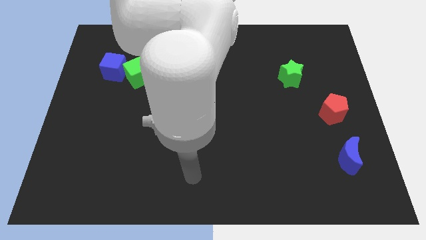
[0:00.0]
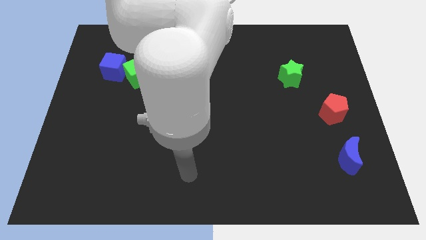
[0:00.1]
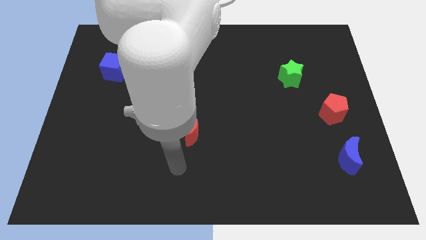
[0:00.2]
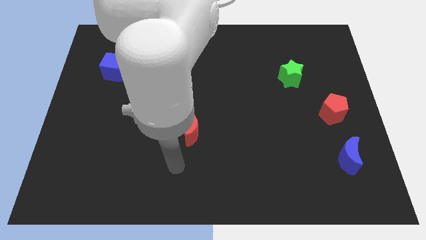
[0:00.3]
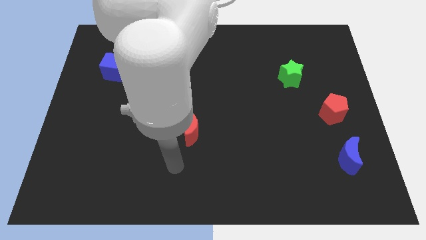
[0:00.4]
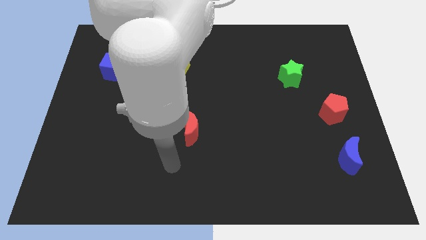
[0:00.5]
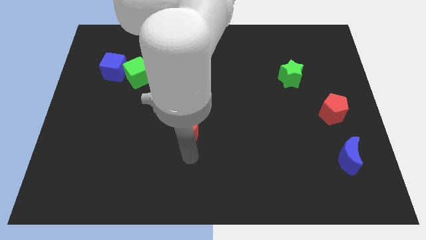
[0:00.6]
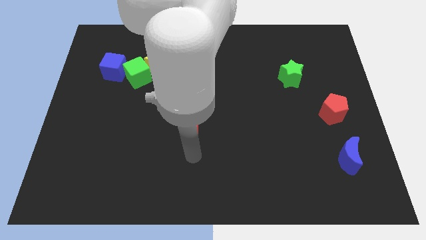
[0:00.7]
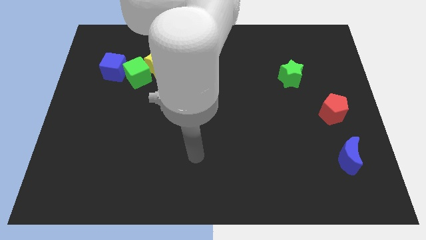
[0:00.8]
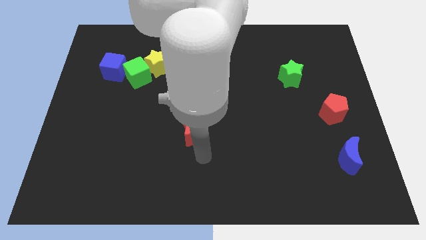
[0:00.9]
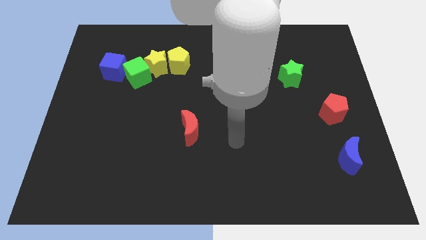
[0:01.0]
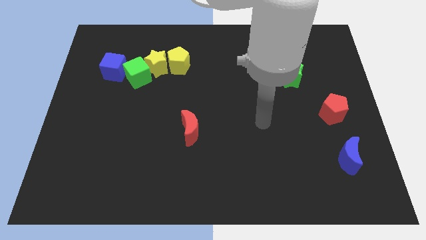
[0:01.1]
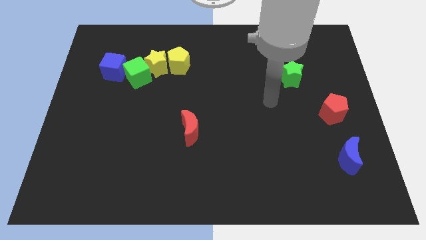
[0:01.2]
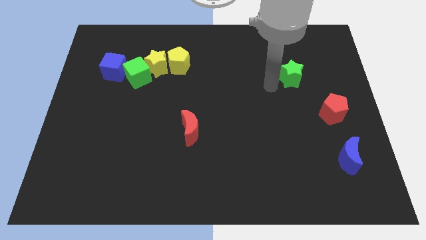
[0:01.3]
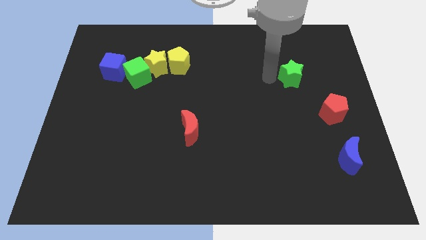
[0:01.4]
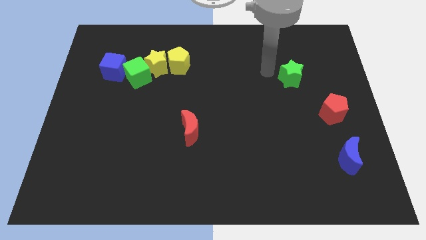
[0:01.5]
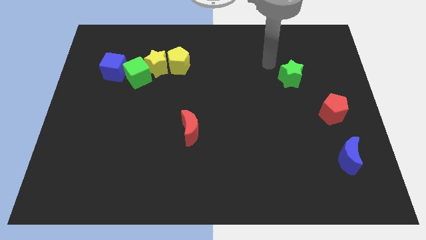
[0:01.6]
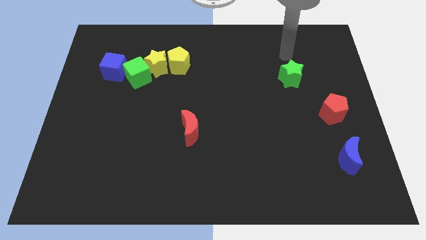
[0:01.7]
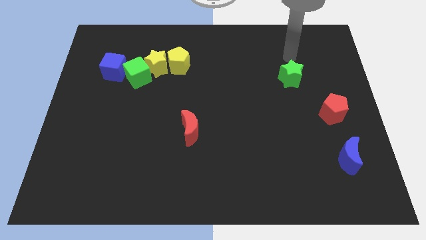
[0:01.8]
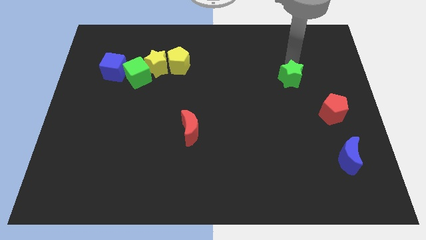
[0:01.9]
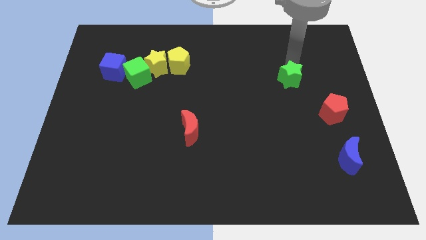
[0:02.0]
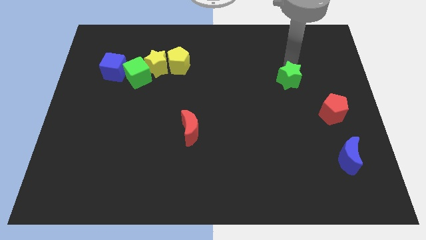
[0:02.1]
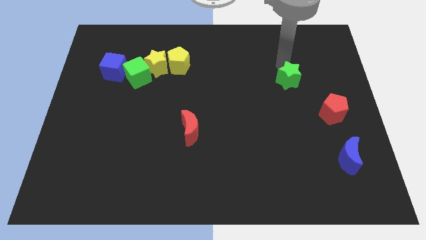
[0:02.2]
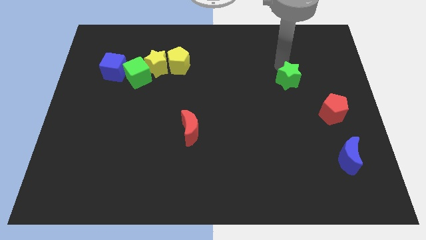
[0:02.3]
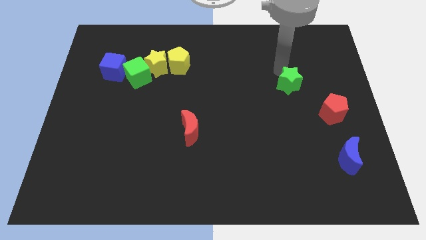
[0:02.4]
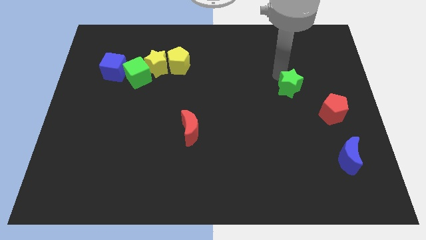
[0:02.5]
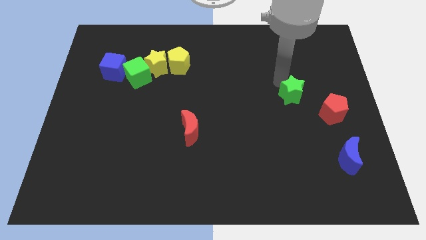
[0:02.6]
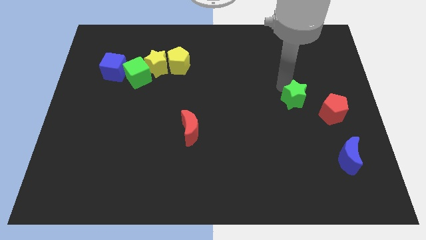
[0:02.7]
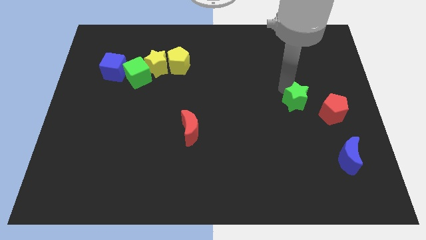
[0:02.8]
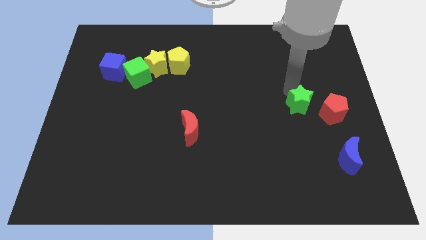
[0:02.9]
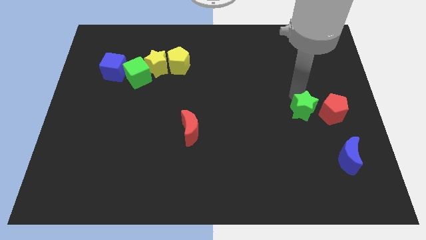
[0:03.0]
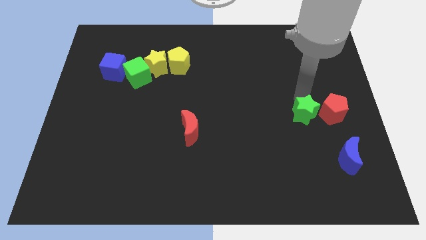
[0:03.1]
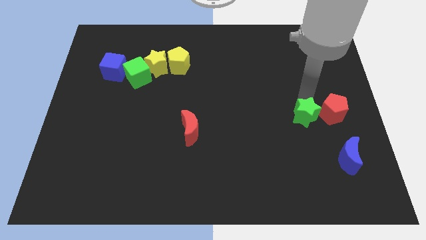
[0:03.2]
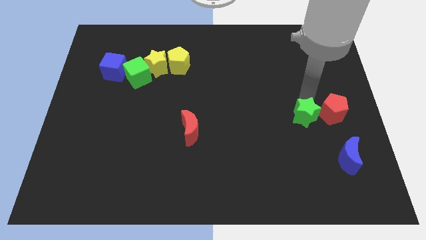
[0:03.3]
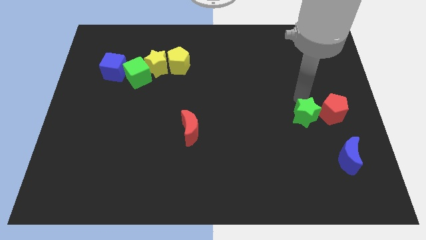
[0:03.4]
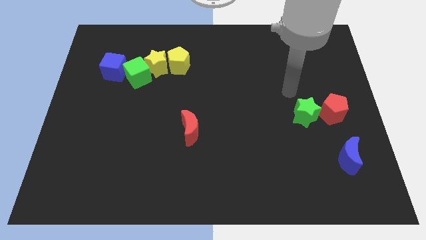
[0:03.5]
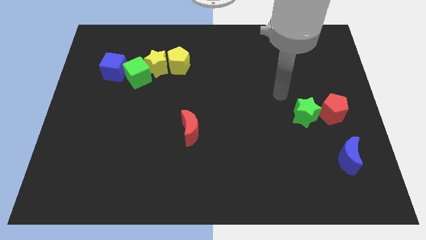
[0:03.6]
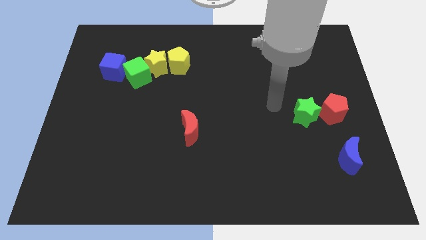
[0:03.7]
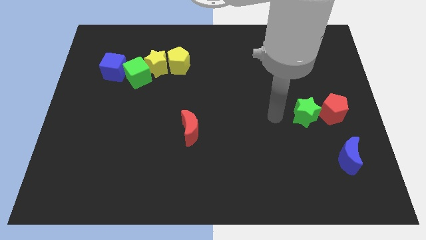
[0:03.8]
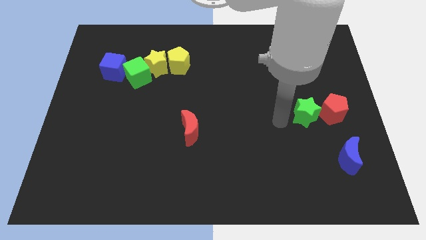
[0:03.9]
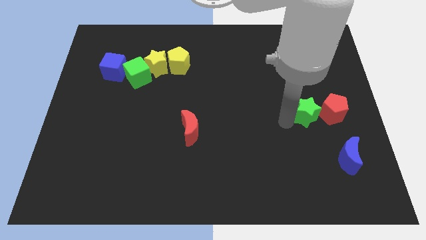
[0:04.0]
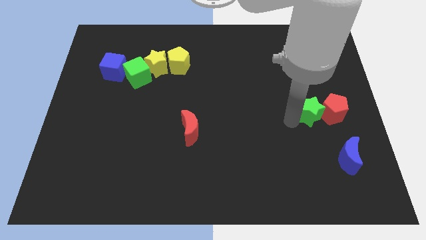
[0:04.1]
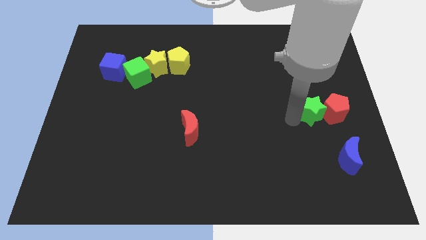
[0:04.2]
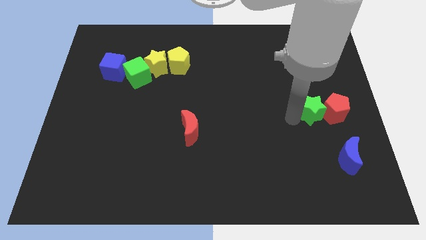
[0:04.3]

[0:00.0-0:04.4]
move the green star next to the red pentagon

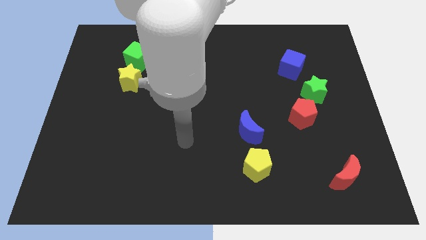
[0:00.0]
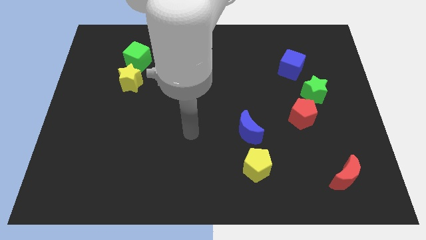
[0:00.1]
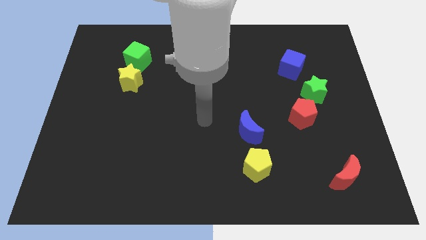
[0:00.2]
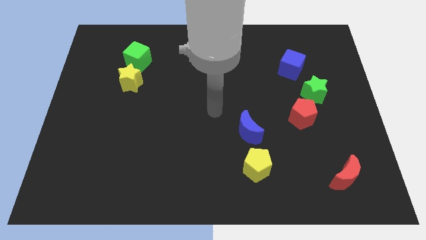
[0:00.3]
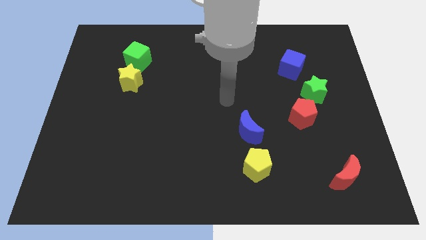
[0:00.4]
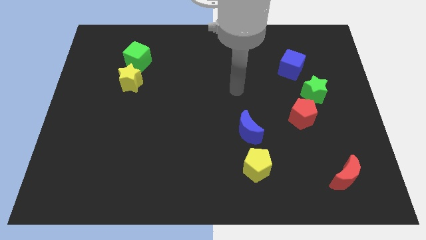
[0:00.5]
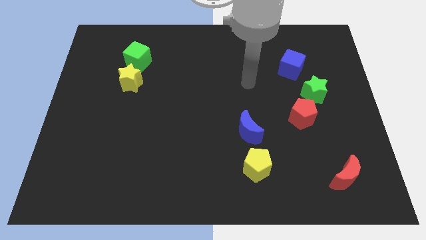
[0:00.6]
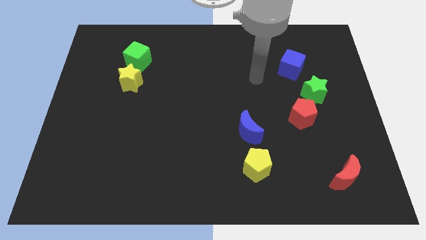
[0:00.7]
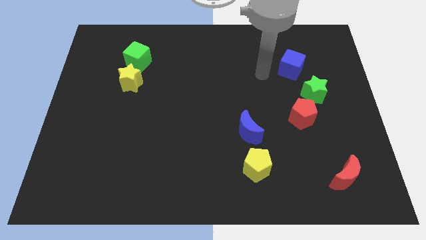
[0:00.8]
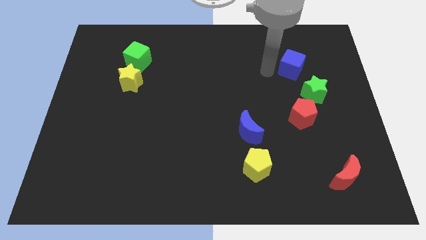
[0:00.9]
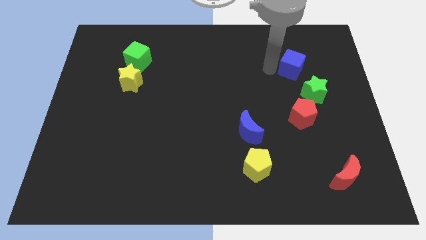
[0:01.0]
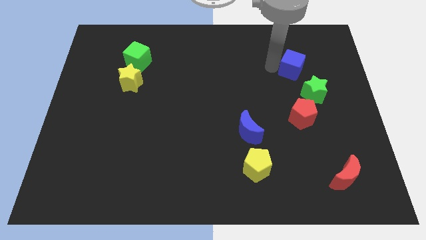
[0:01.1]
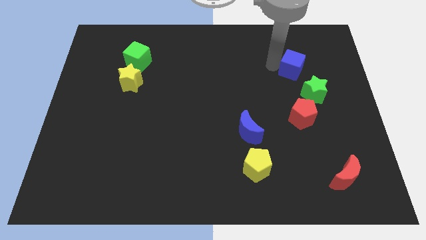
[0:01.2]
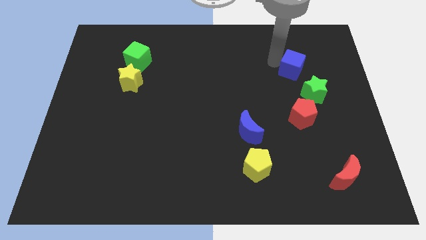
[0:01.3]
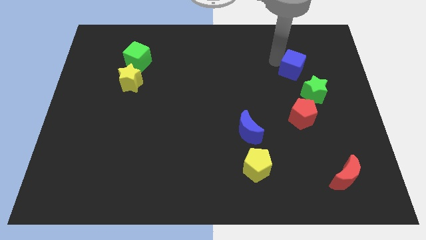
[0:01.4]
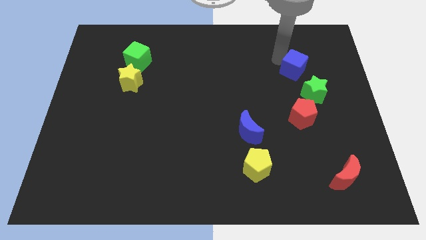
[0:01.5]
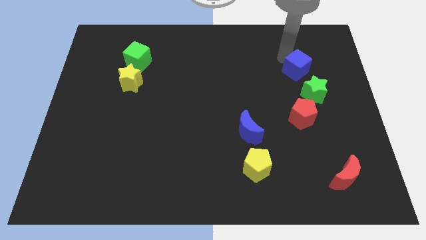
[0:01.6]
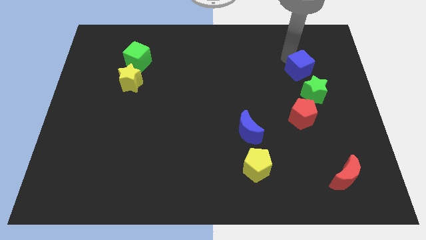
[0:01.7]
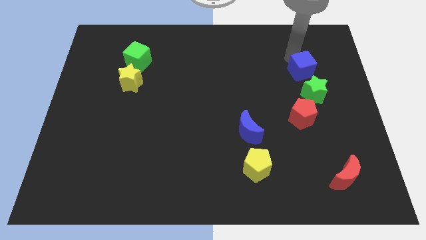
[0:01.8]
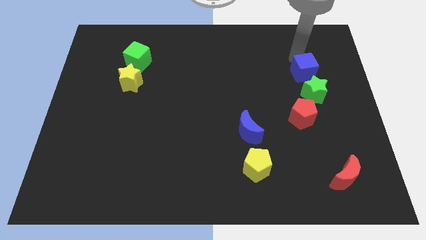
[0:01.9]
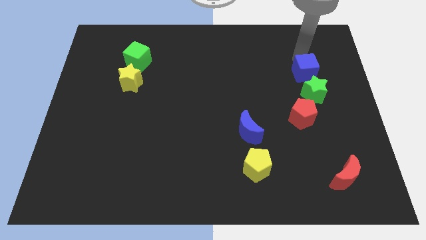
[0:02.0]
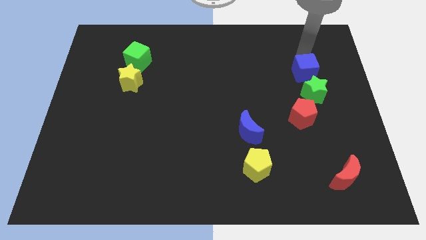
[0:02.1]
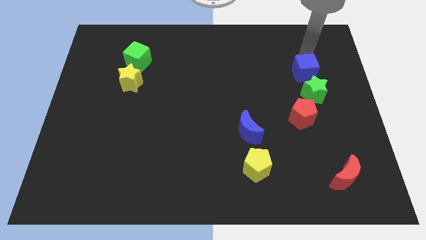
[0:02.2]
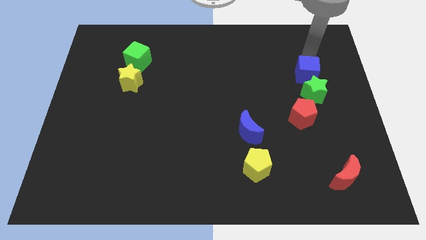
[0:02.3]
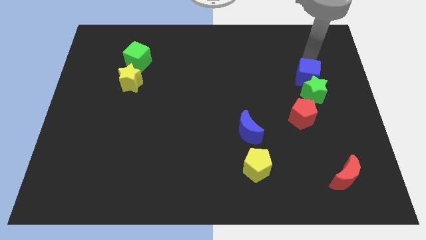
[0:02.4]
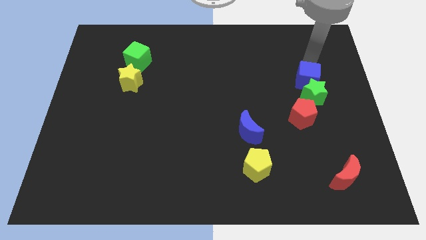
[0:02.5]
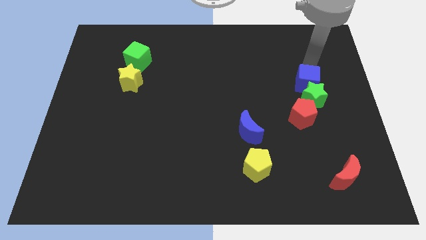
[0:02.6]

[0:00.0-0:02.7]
move the blue cube towards the green star

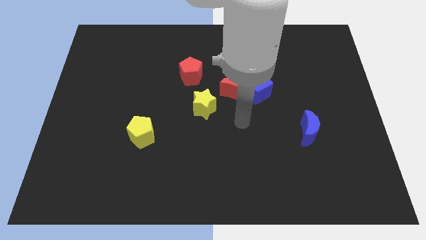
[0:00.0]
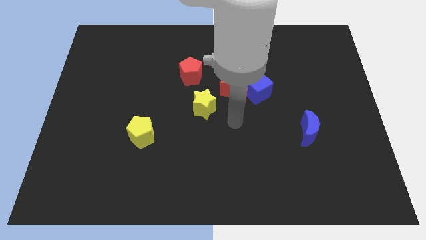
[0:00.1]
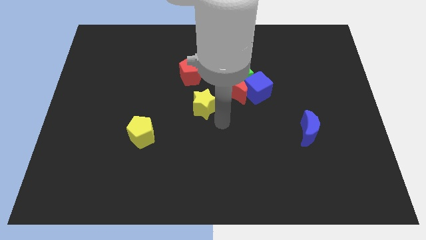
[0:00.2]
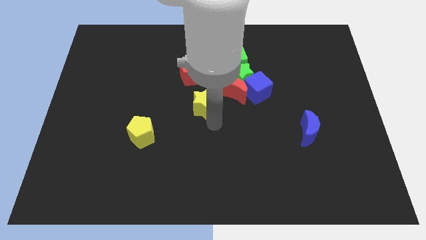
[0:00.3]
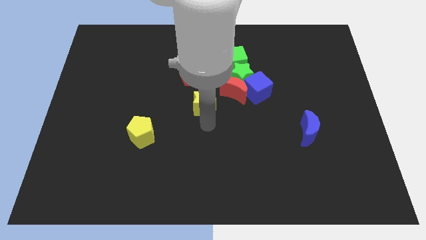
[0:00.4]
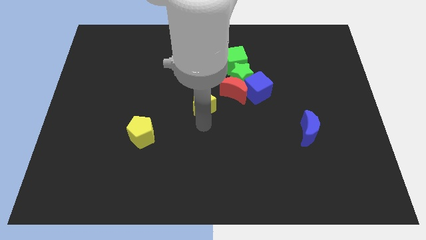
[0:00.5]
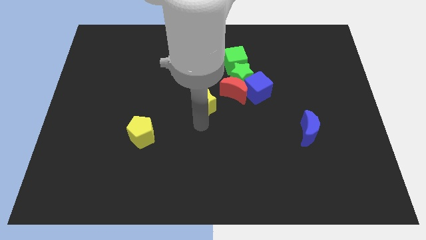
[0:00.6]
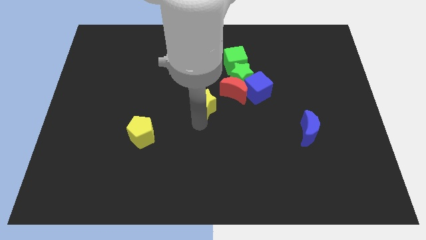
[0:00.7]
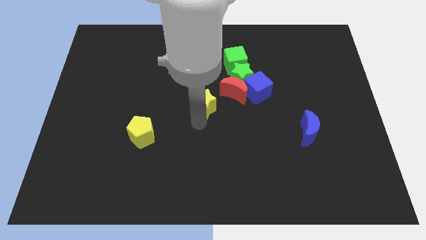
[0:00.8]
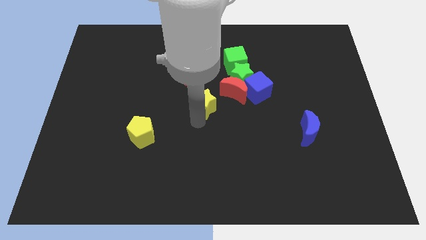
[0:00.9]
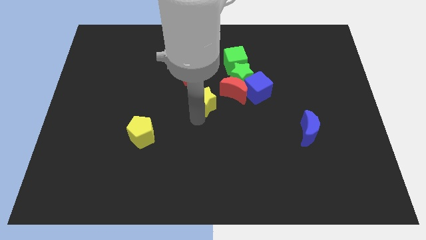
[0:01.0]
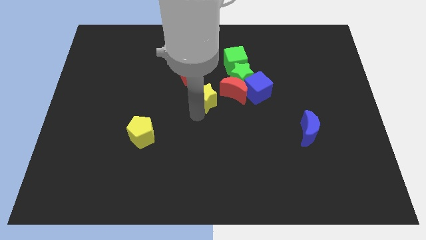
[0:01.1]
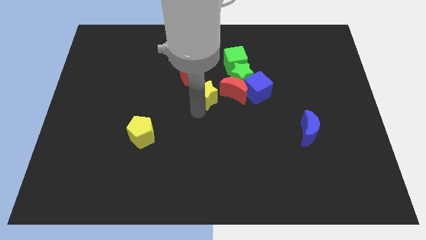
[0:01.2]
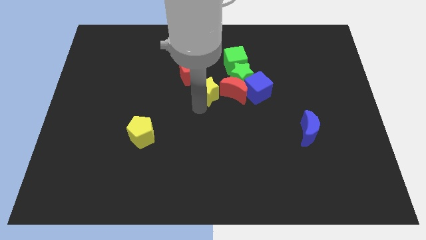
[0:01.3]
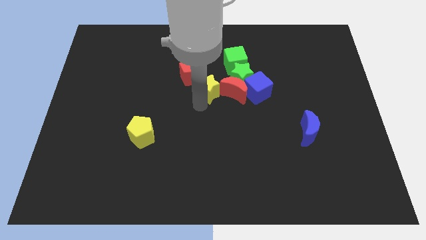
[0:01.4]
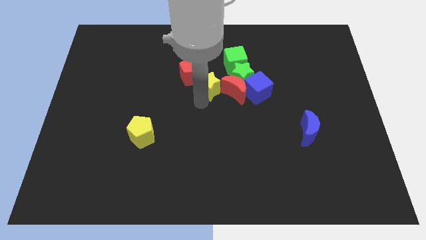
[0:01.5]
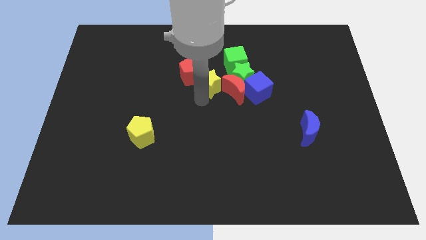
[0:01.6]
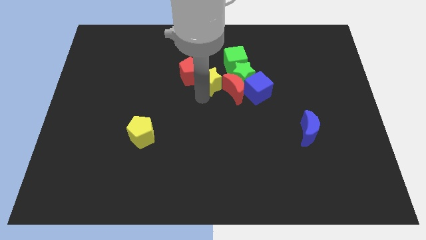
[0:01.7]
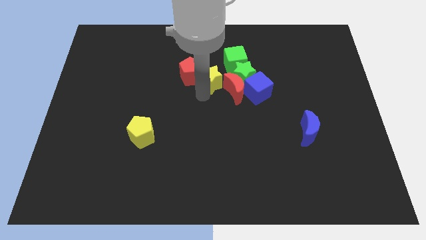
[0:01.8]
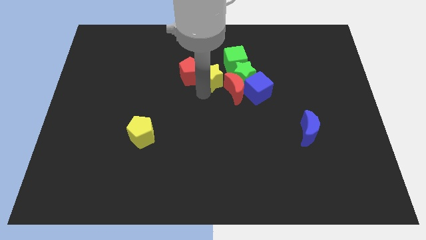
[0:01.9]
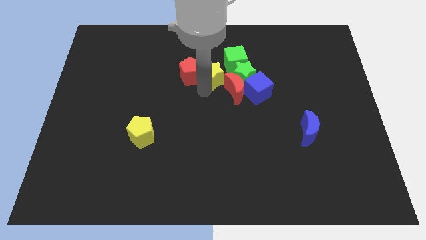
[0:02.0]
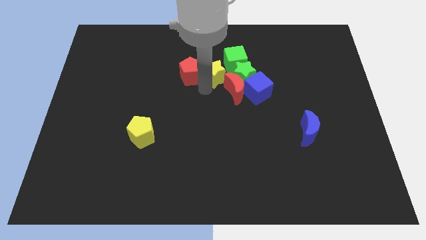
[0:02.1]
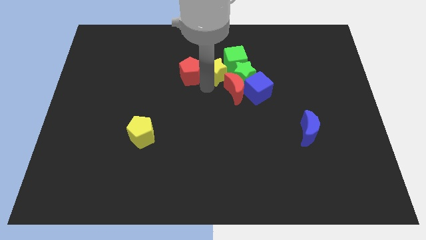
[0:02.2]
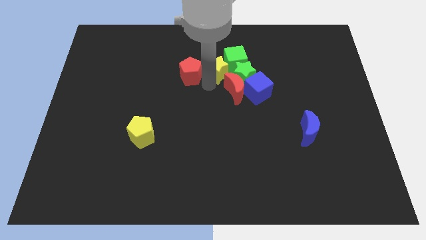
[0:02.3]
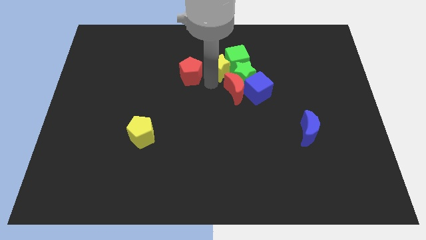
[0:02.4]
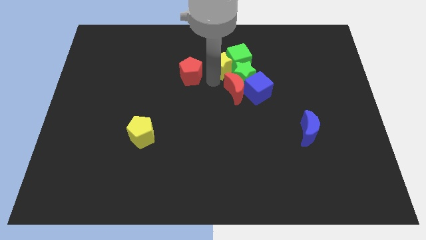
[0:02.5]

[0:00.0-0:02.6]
slide the yellow star next to the green cube
